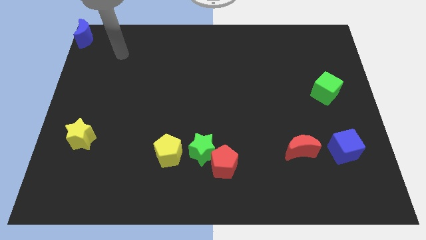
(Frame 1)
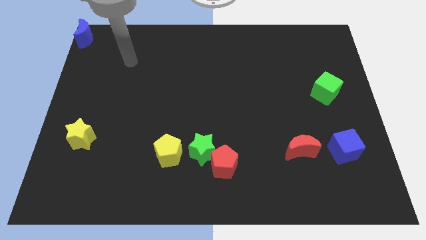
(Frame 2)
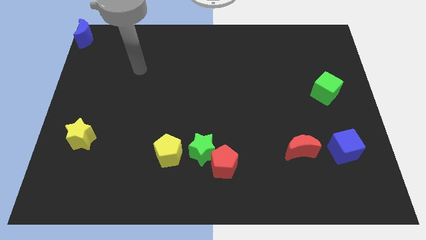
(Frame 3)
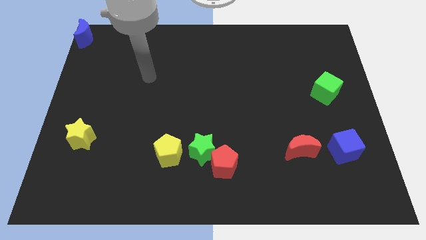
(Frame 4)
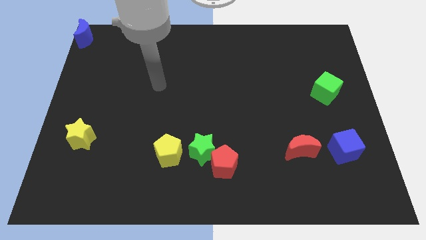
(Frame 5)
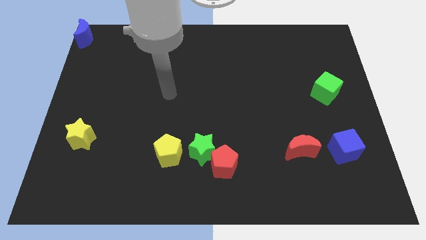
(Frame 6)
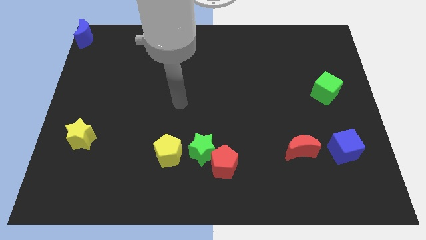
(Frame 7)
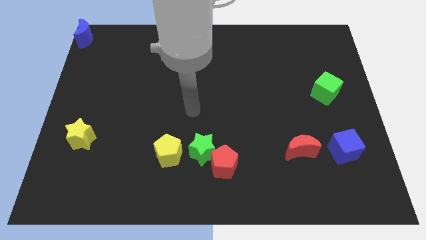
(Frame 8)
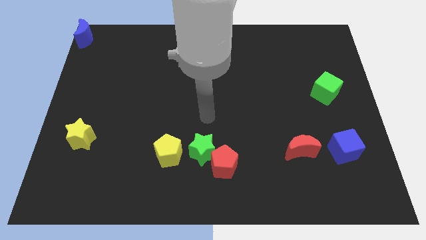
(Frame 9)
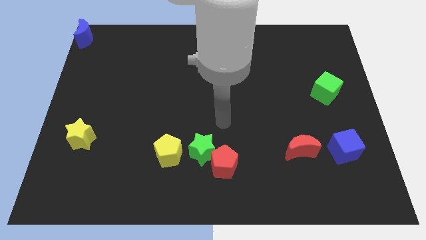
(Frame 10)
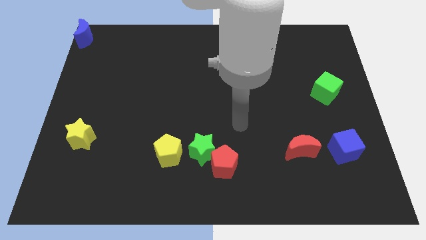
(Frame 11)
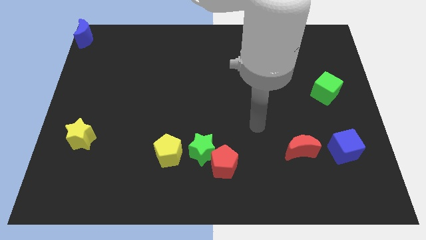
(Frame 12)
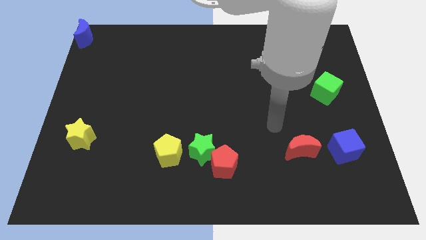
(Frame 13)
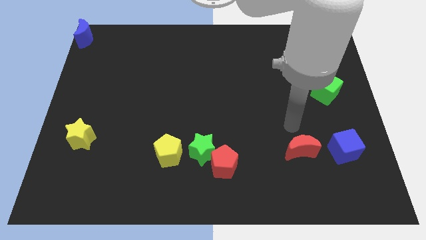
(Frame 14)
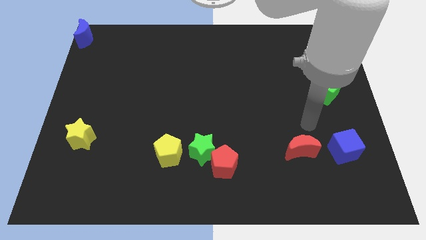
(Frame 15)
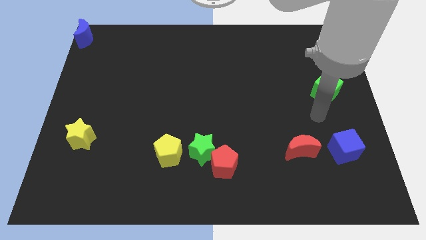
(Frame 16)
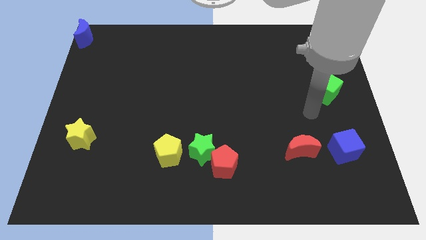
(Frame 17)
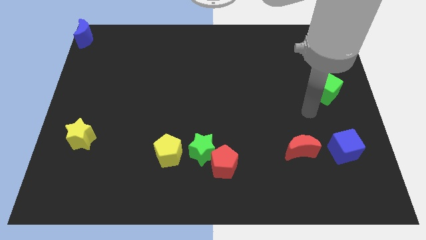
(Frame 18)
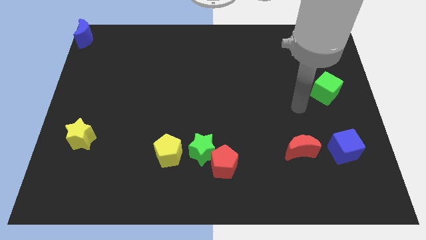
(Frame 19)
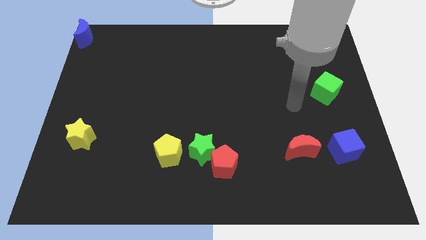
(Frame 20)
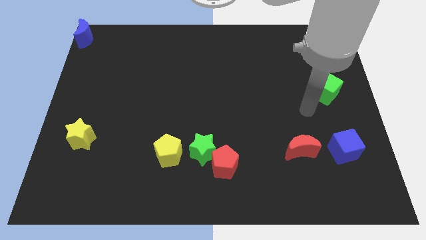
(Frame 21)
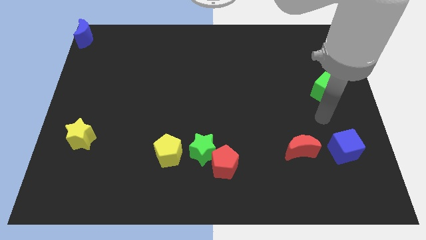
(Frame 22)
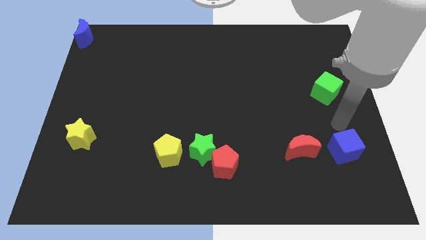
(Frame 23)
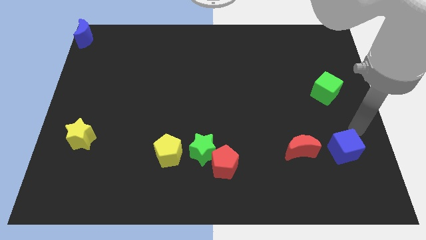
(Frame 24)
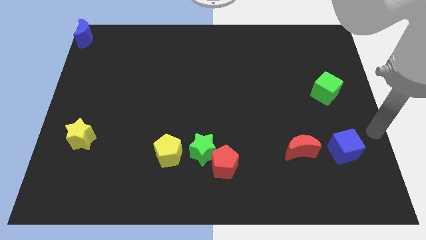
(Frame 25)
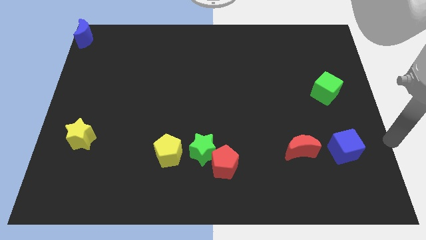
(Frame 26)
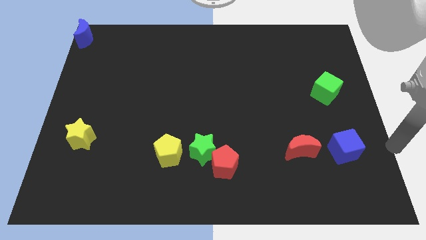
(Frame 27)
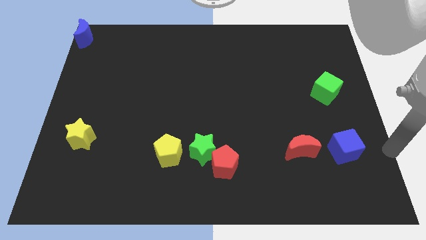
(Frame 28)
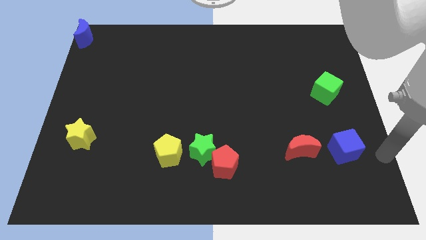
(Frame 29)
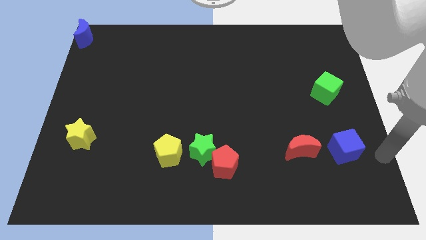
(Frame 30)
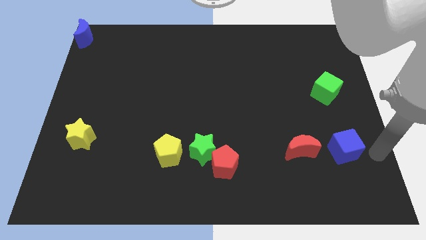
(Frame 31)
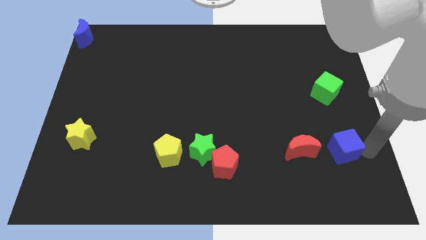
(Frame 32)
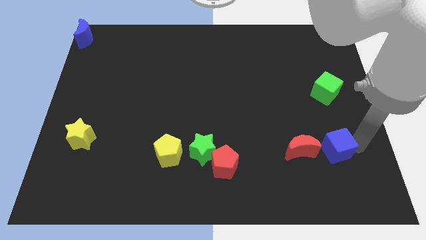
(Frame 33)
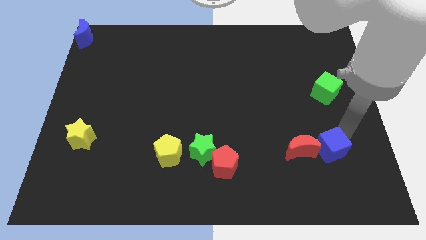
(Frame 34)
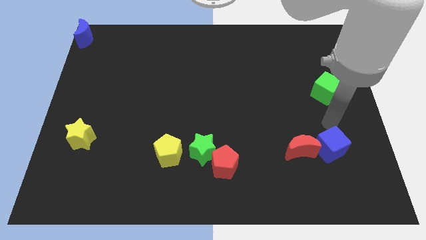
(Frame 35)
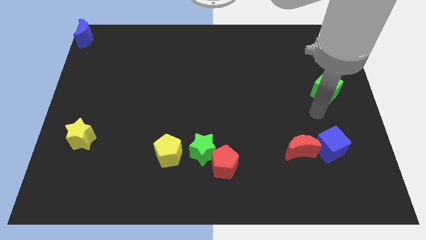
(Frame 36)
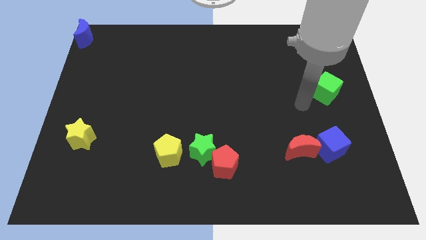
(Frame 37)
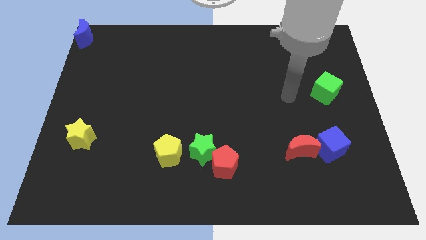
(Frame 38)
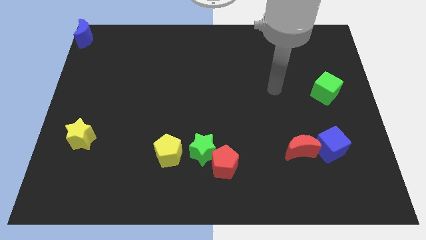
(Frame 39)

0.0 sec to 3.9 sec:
move the blue cube towards the red moon

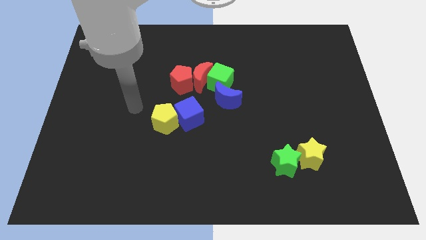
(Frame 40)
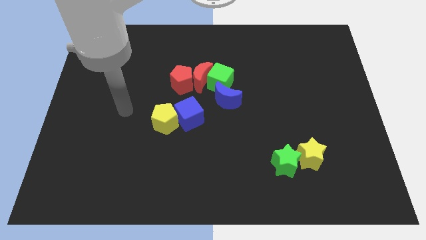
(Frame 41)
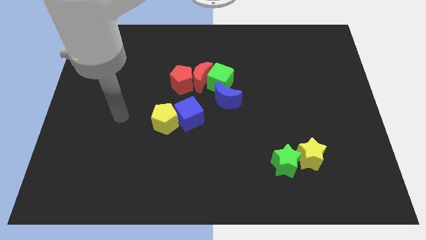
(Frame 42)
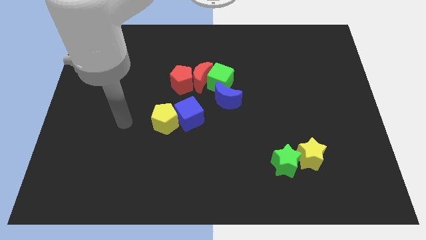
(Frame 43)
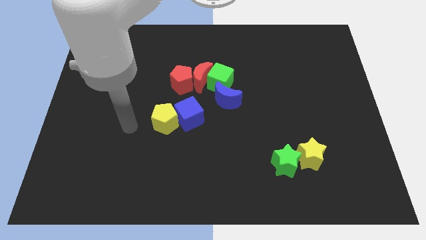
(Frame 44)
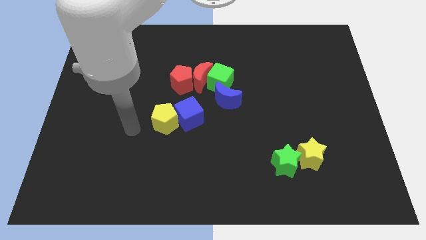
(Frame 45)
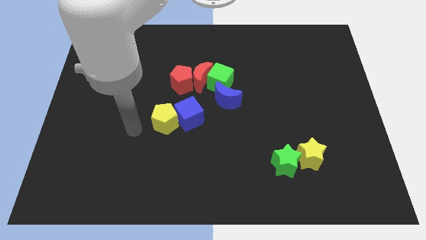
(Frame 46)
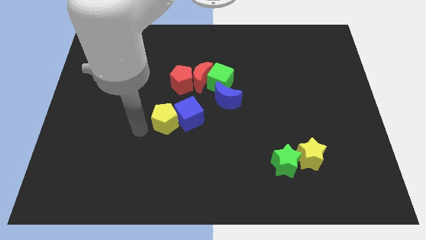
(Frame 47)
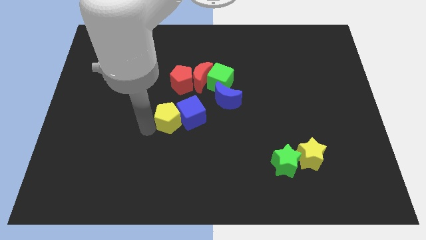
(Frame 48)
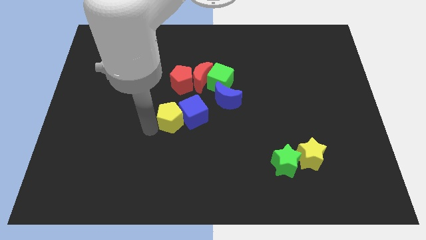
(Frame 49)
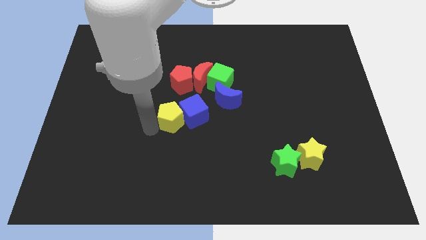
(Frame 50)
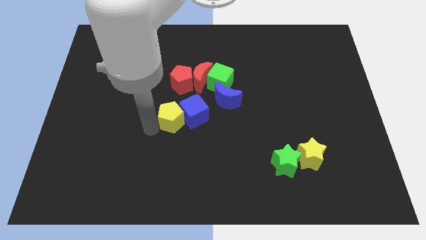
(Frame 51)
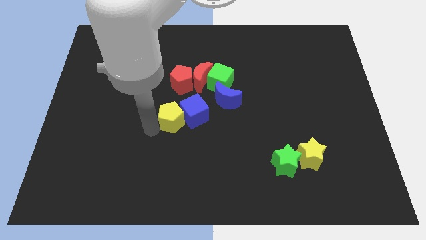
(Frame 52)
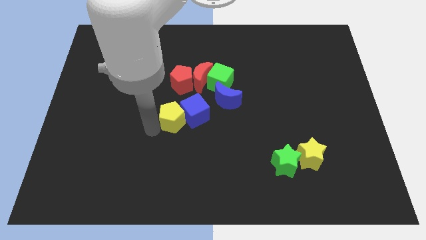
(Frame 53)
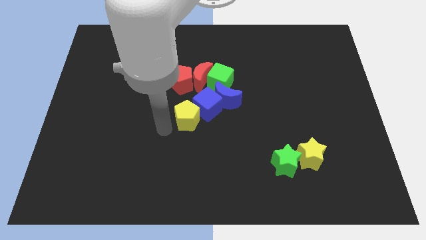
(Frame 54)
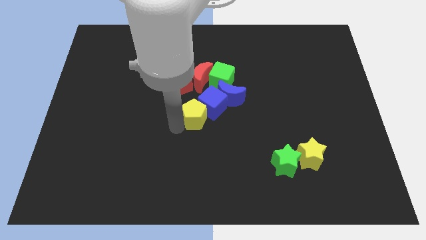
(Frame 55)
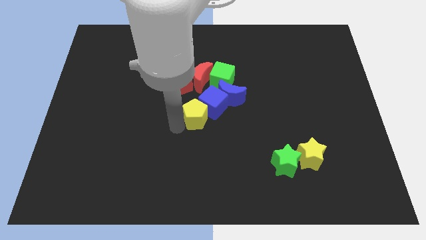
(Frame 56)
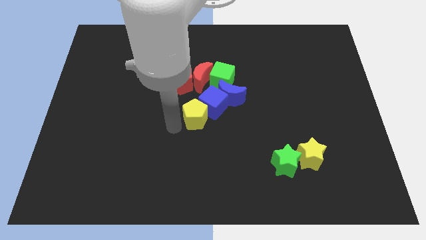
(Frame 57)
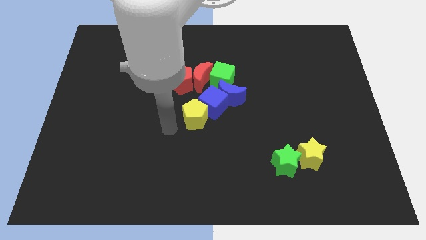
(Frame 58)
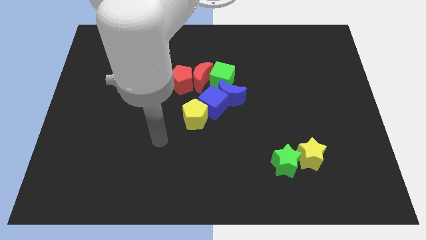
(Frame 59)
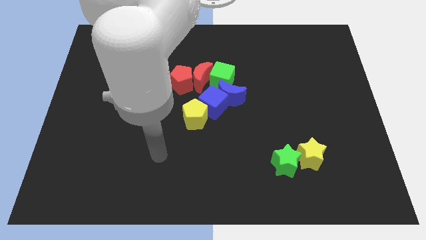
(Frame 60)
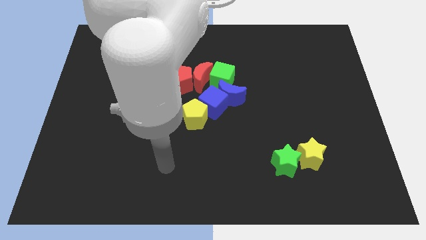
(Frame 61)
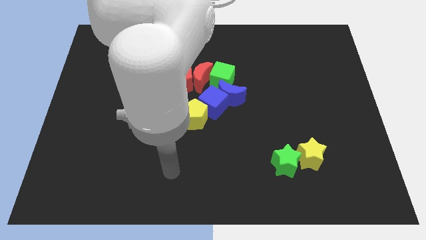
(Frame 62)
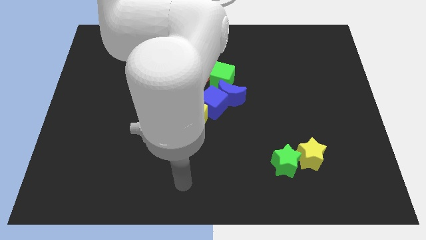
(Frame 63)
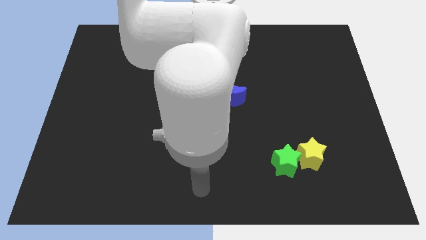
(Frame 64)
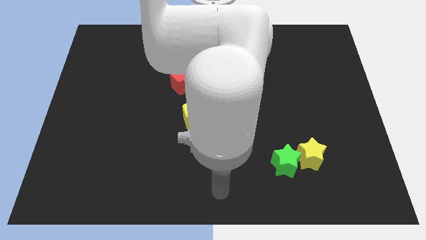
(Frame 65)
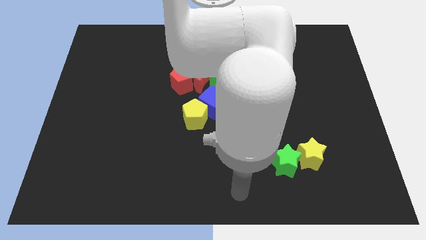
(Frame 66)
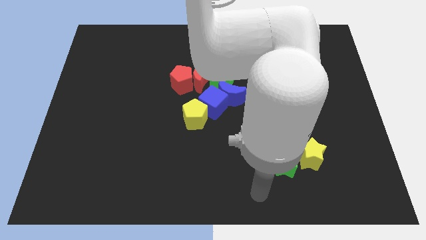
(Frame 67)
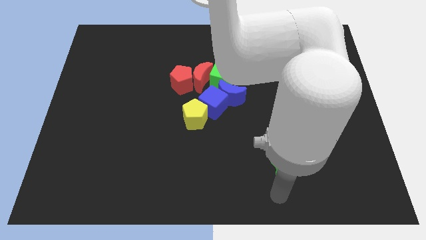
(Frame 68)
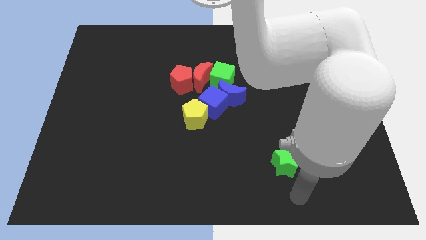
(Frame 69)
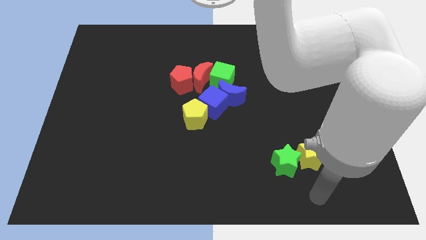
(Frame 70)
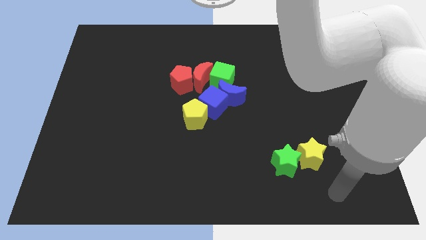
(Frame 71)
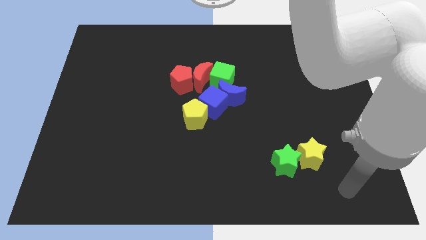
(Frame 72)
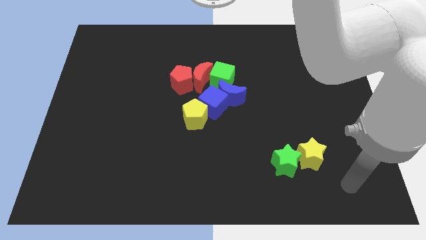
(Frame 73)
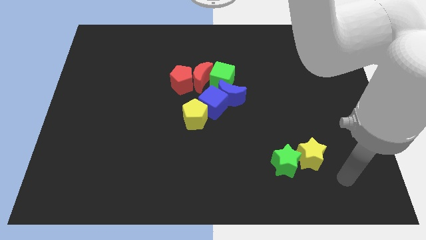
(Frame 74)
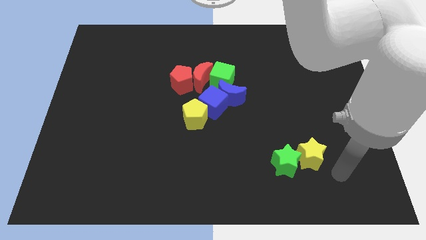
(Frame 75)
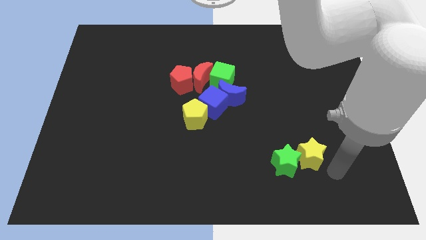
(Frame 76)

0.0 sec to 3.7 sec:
push the yellow star along with blue cube into the blue crescent

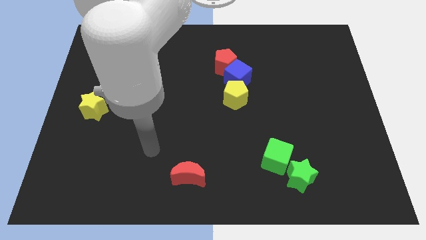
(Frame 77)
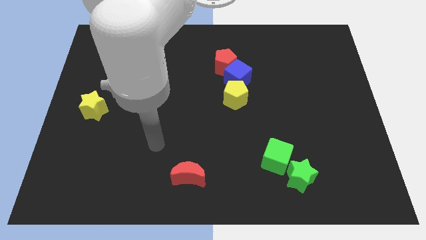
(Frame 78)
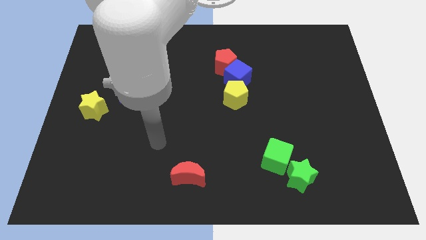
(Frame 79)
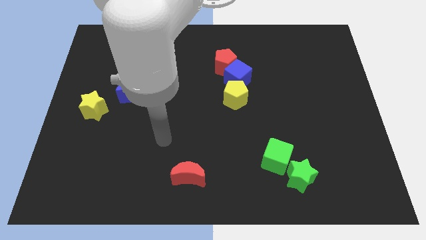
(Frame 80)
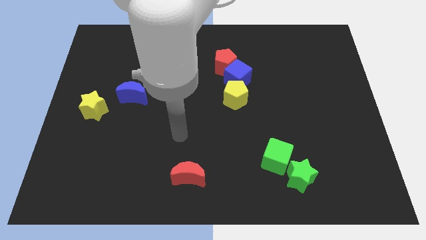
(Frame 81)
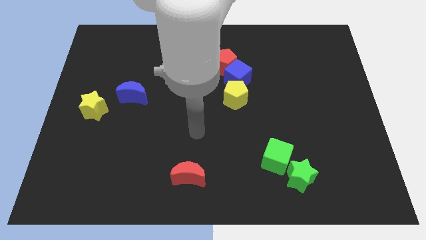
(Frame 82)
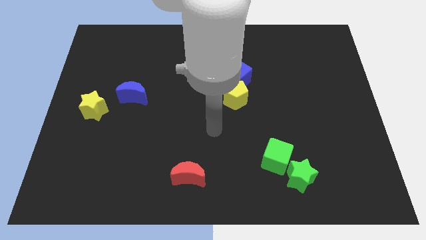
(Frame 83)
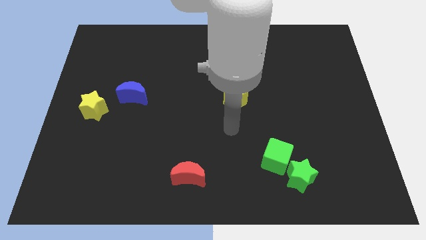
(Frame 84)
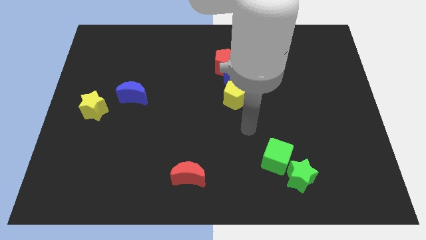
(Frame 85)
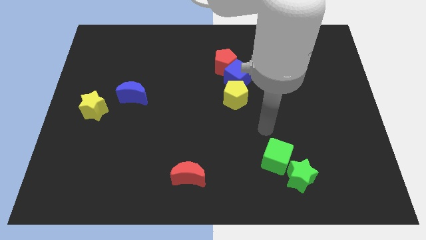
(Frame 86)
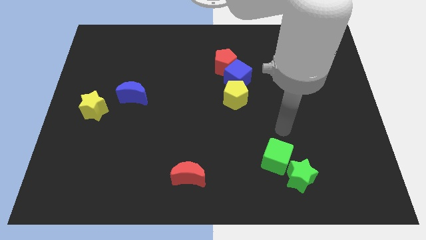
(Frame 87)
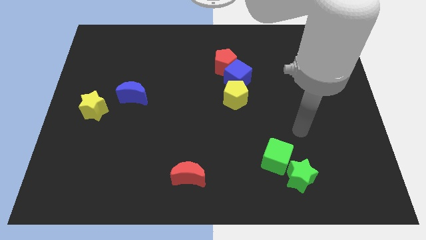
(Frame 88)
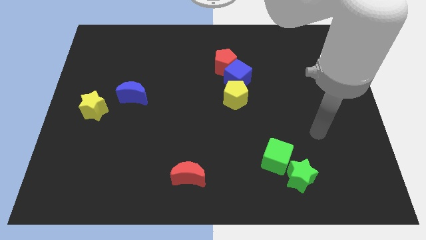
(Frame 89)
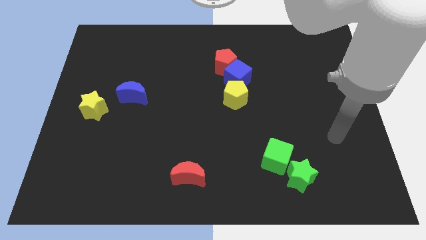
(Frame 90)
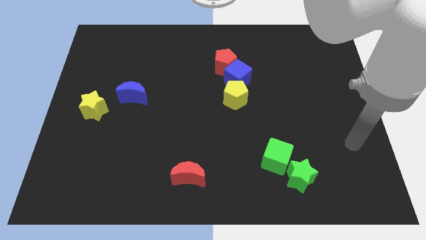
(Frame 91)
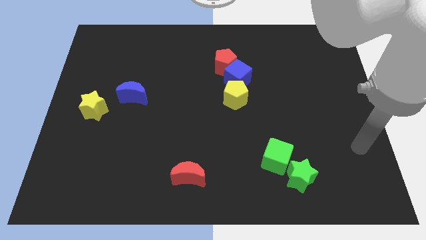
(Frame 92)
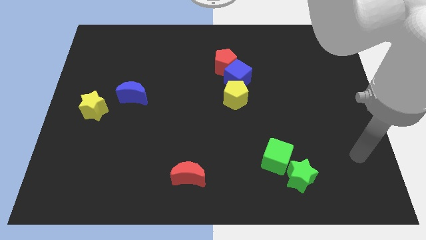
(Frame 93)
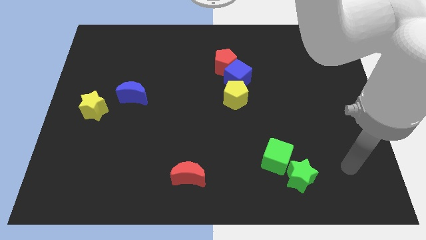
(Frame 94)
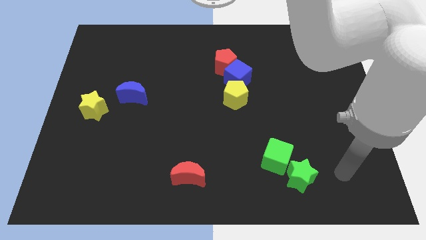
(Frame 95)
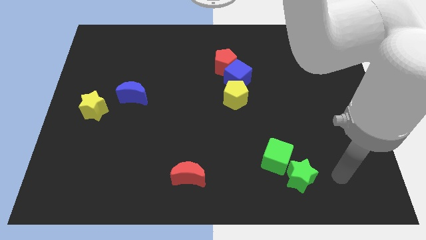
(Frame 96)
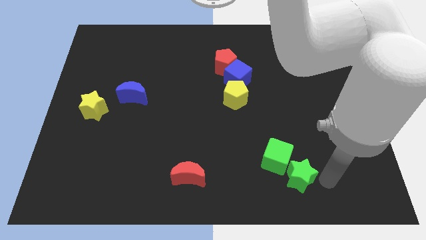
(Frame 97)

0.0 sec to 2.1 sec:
point the arm to the right of the green star
